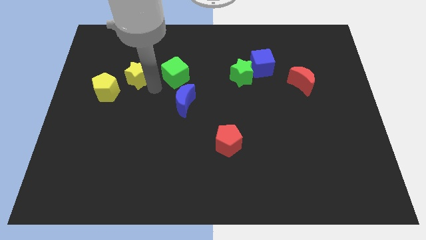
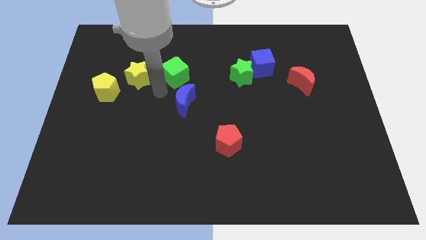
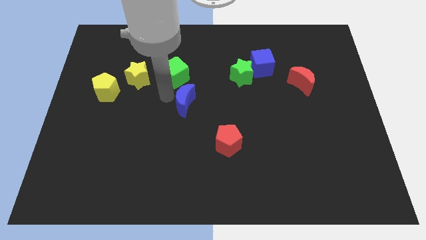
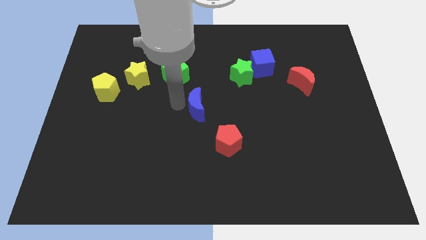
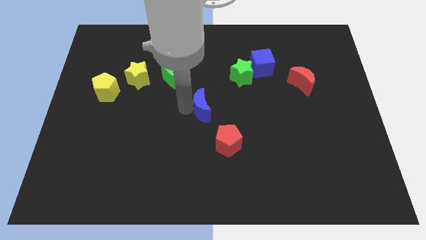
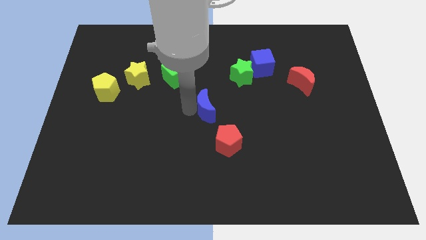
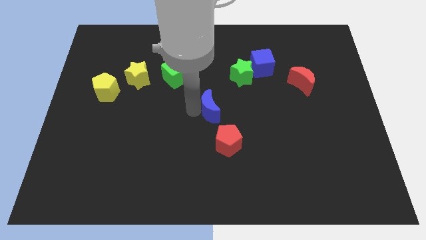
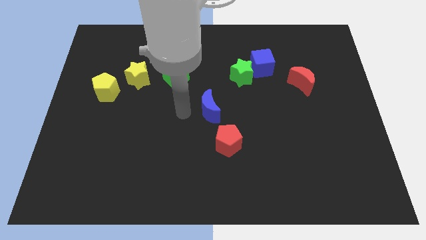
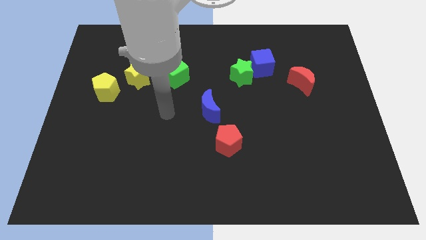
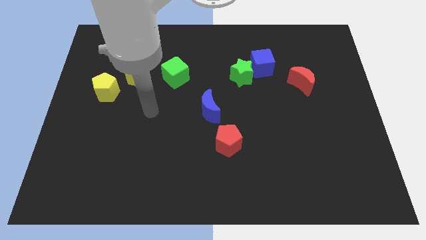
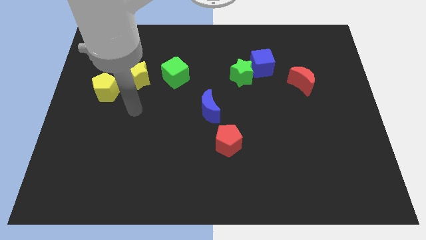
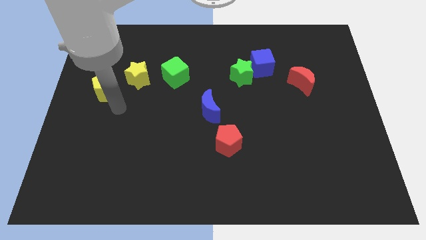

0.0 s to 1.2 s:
place blue crescent to the top left side of the red pentagon

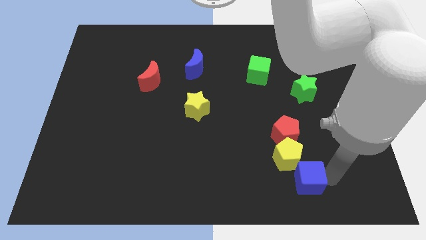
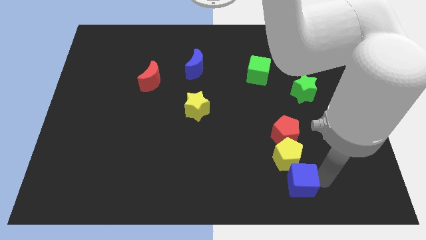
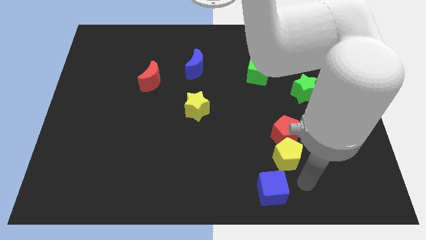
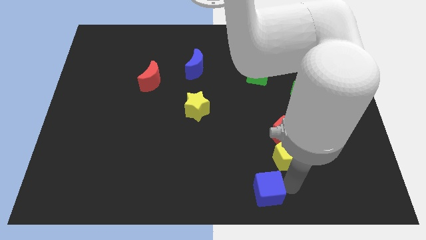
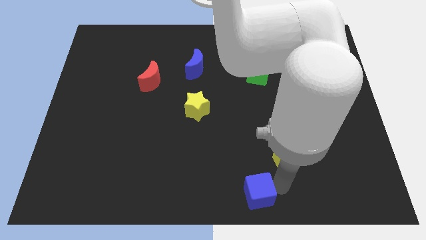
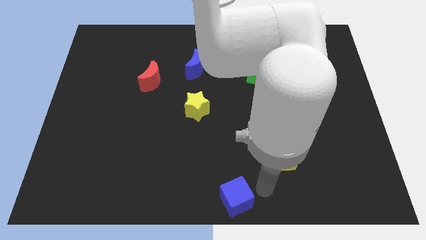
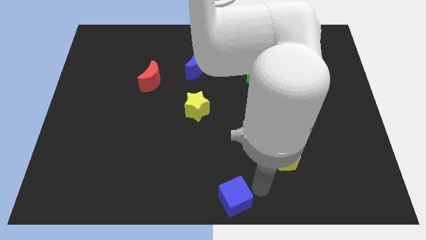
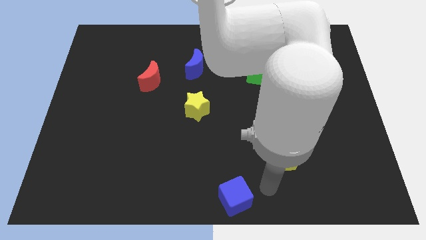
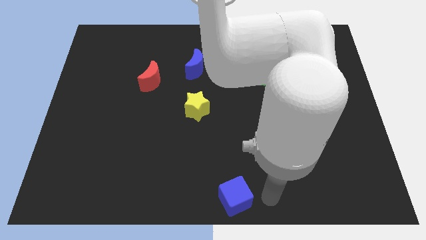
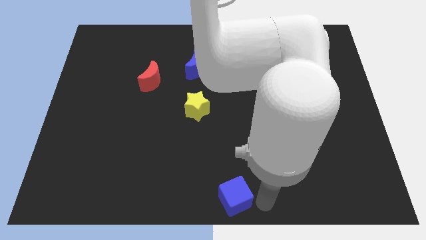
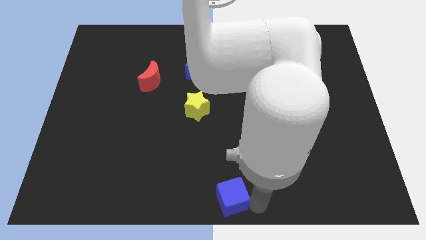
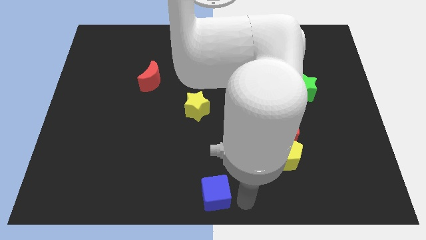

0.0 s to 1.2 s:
push the blue cube to the center bottom of the board

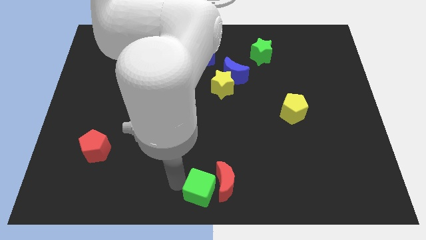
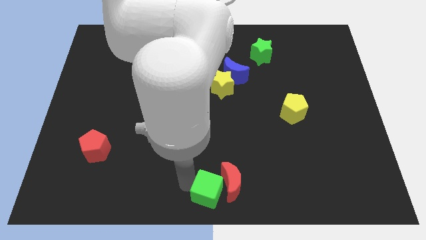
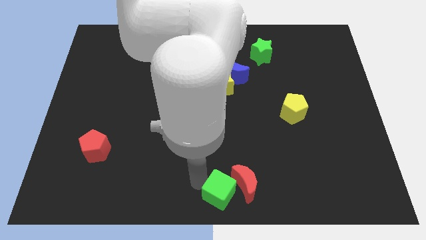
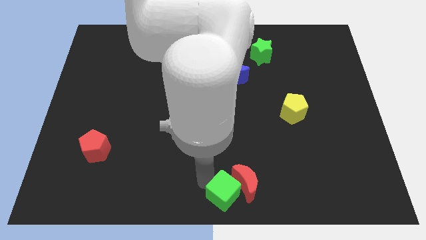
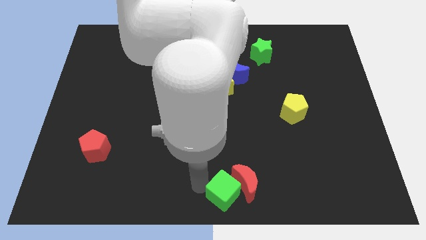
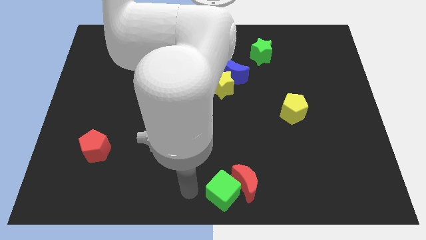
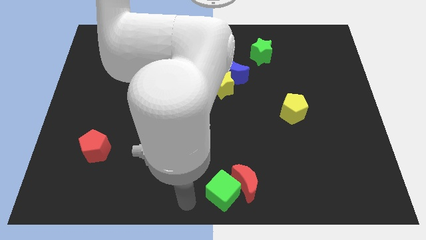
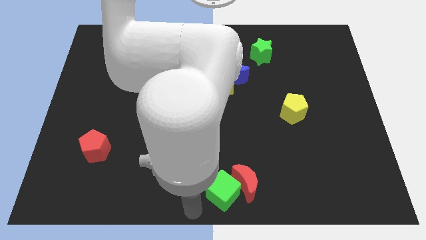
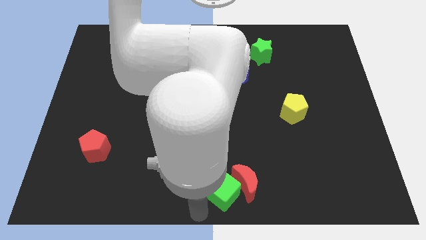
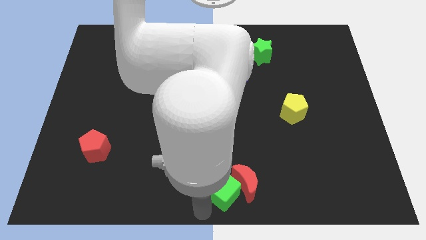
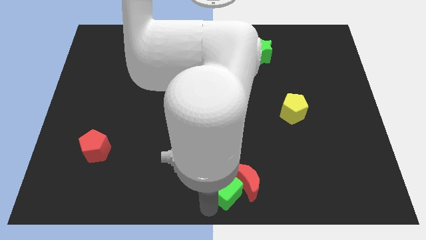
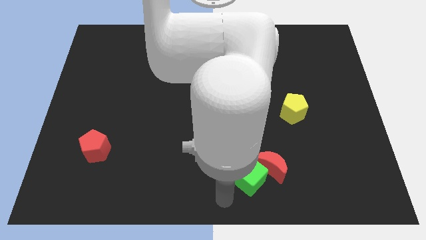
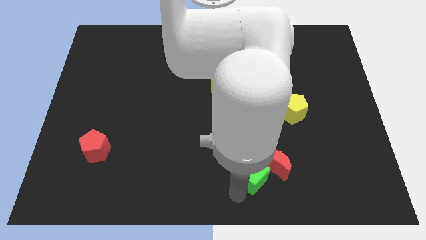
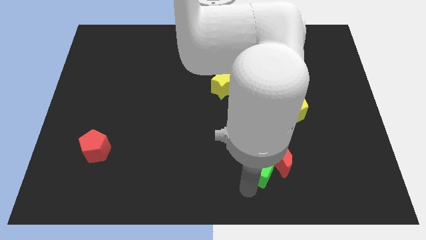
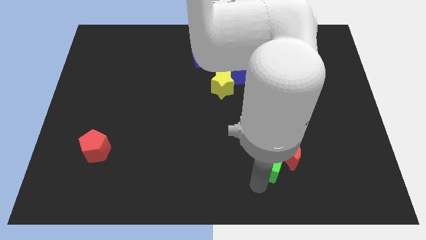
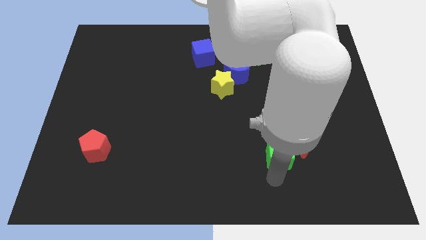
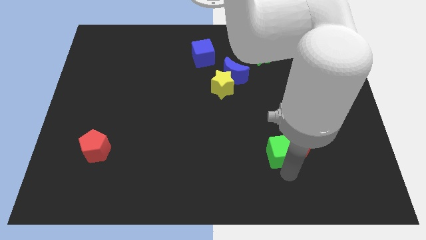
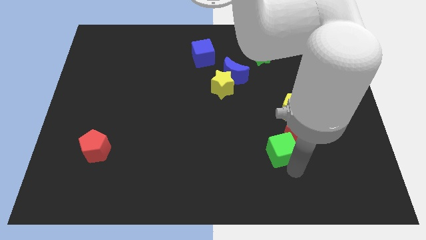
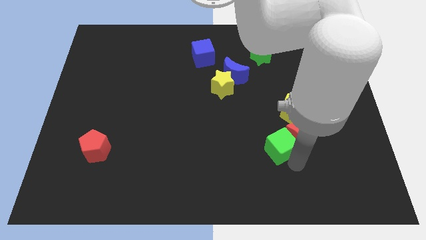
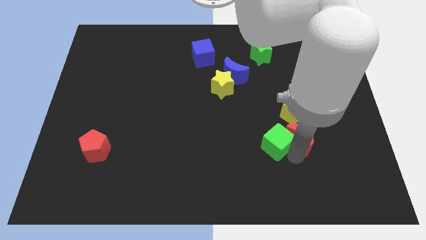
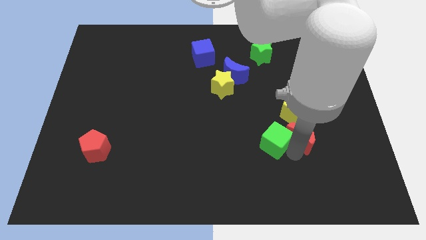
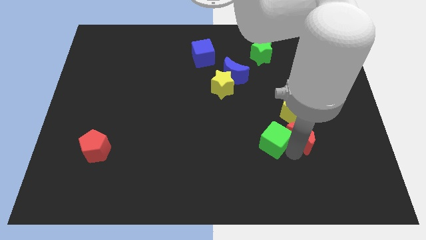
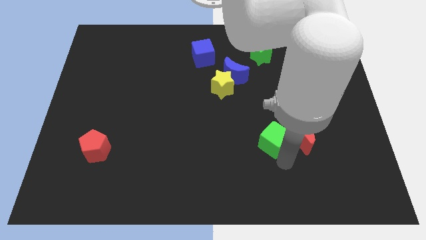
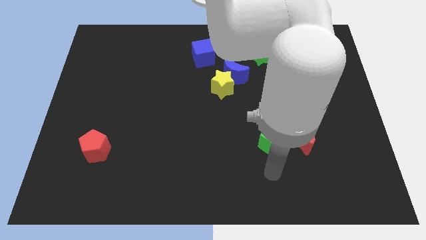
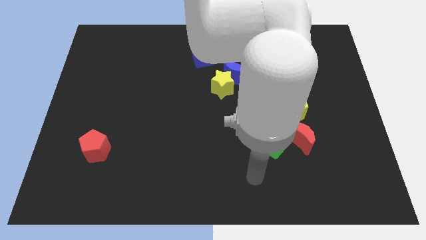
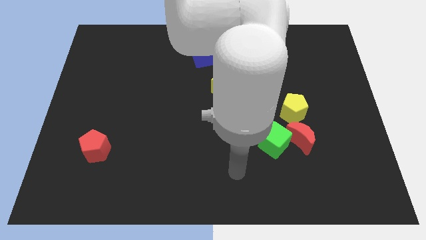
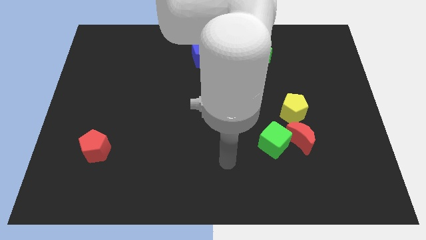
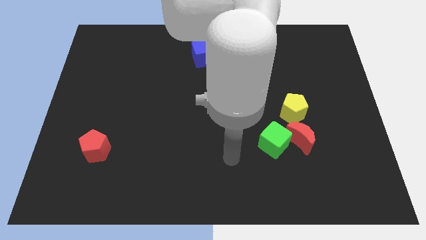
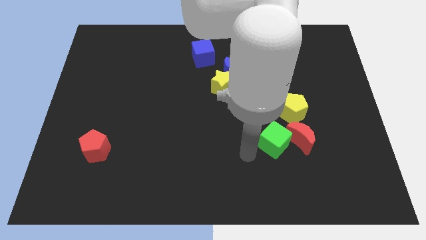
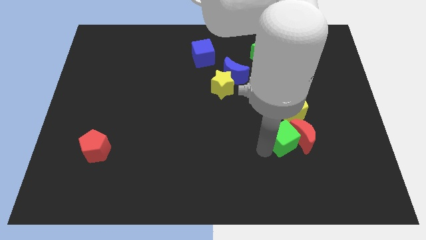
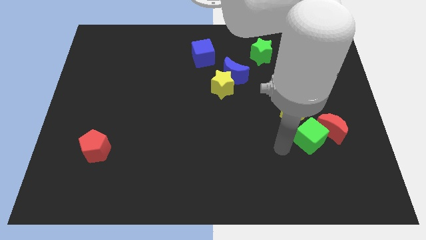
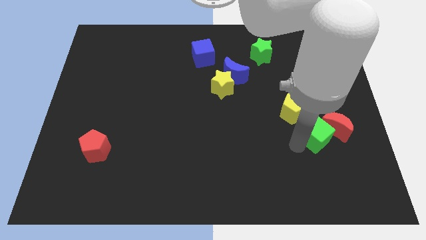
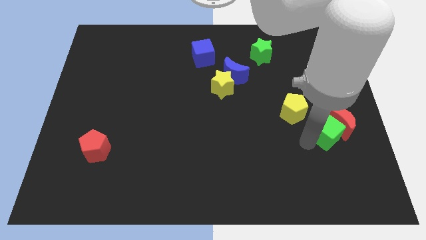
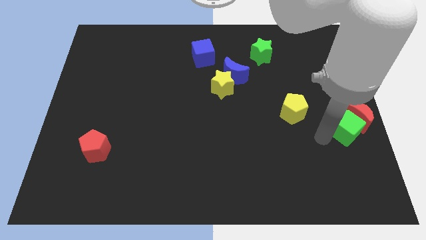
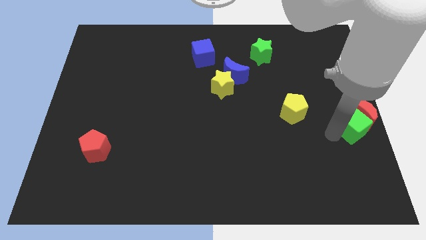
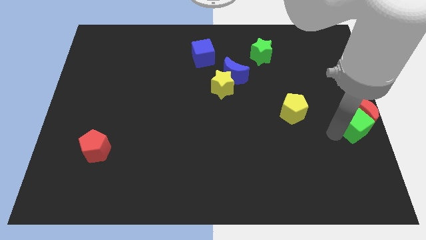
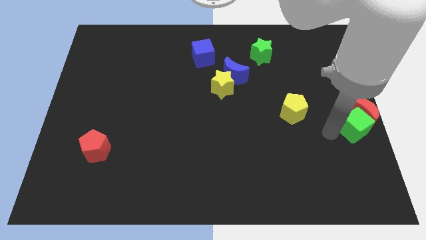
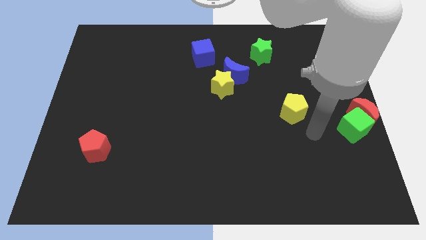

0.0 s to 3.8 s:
move the green cube and red moon to the center right side of the board

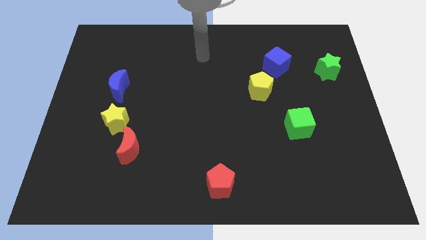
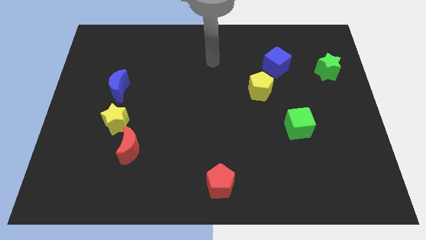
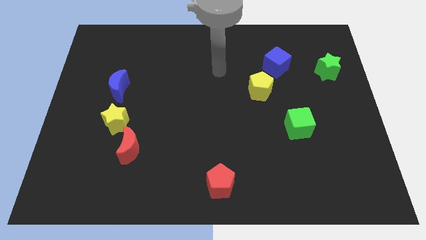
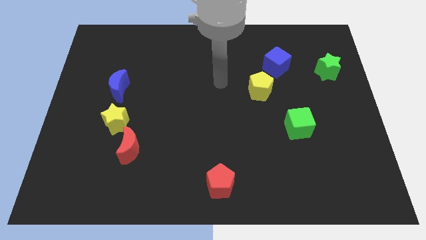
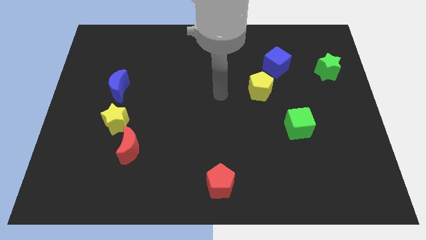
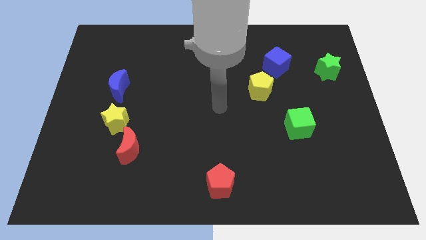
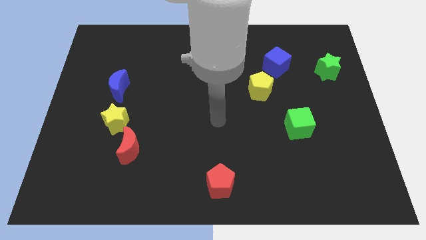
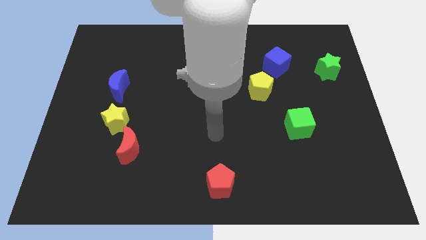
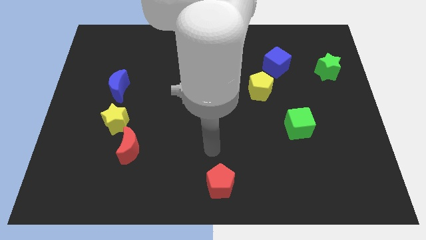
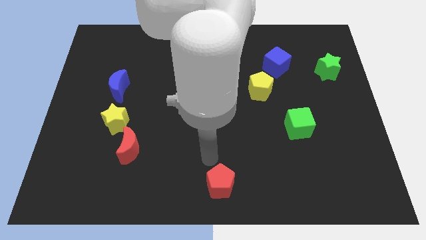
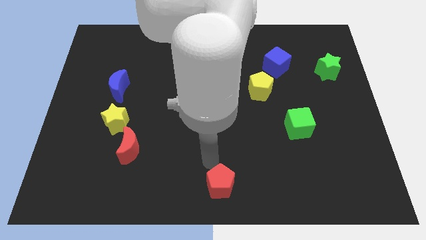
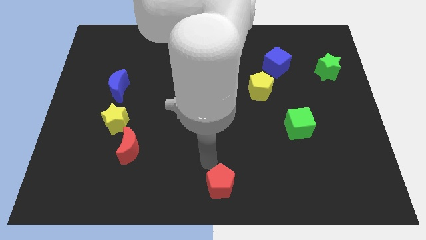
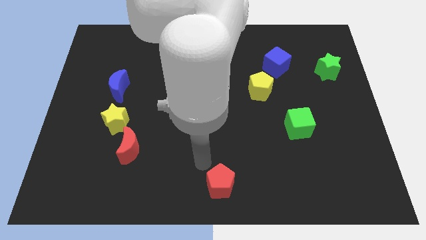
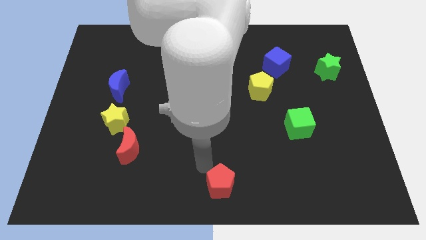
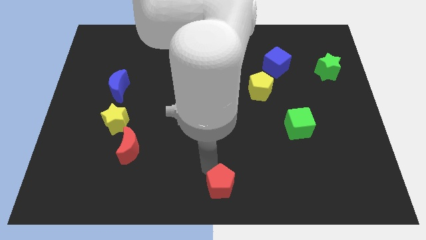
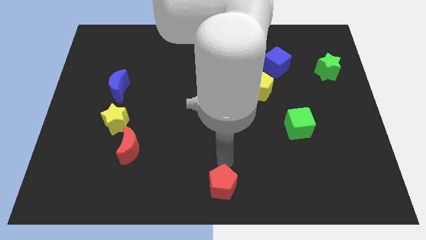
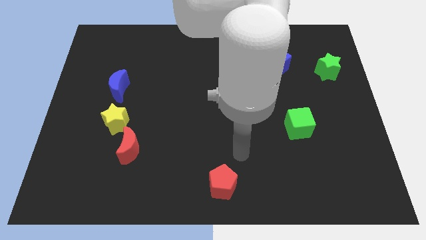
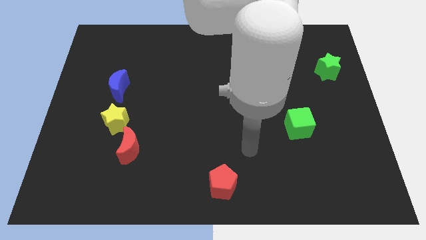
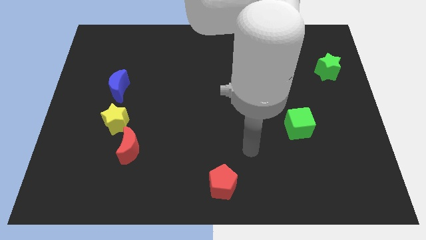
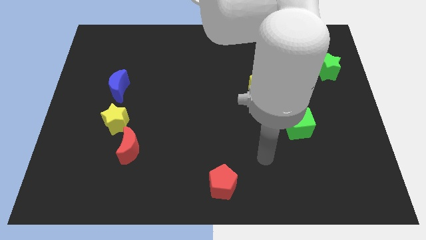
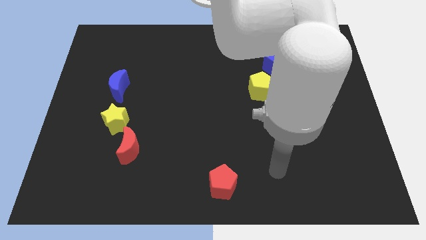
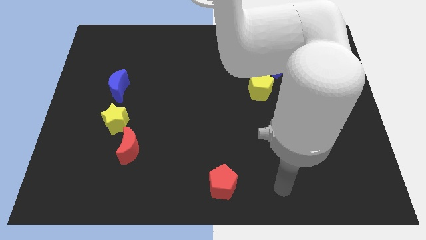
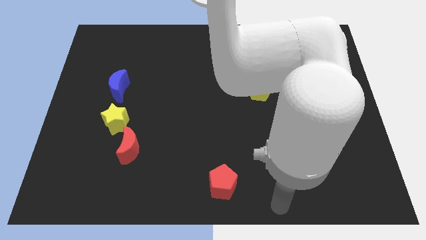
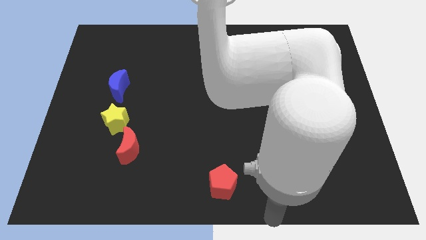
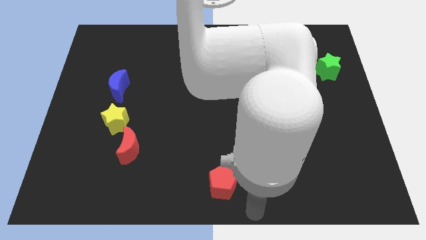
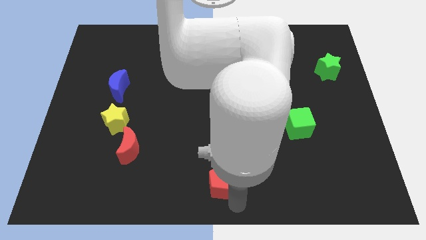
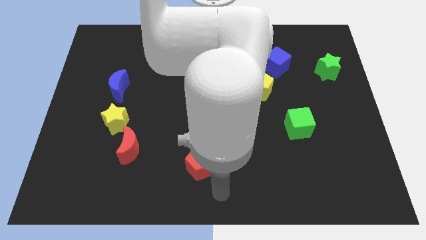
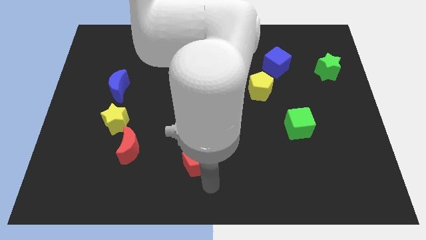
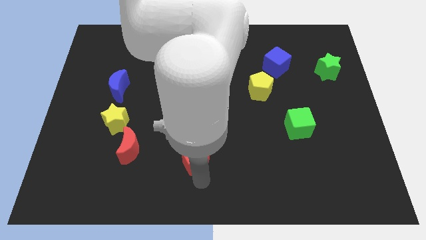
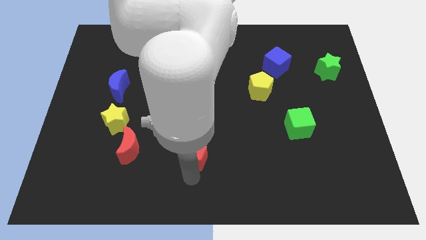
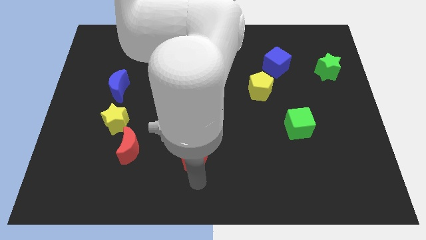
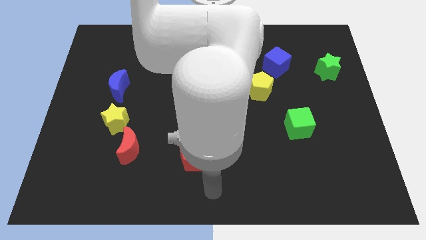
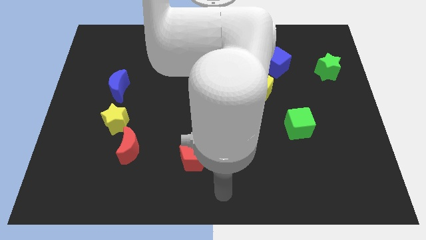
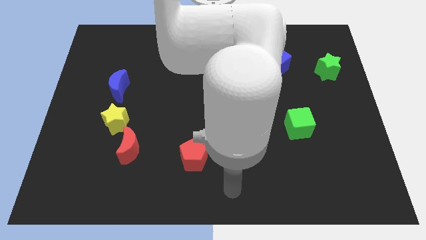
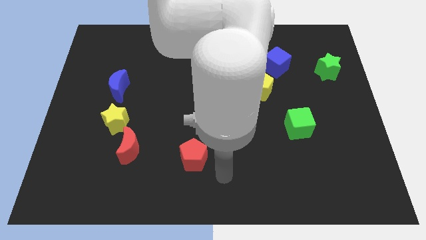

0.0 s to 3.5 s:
place red pentagon to the center
